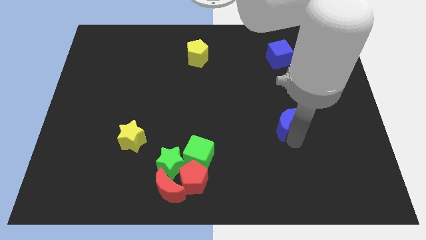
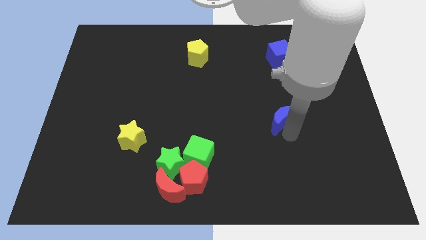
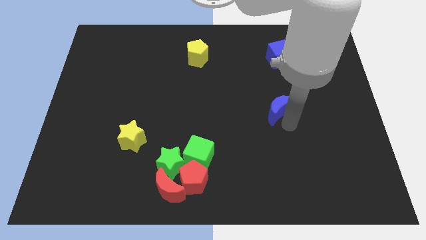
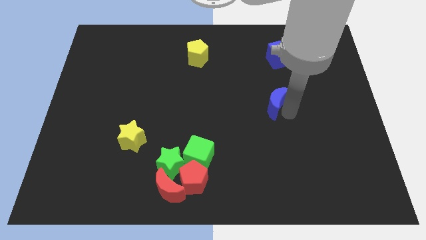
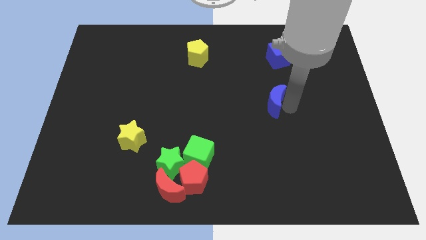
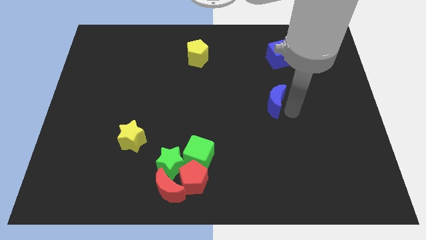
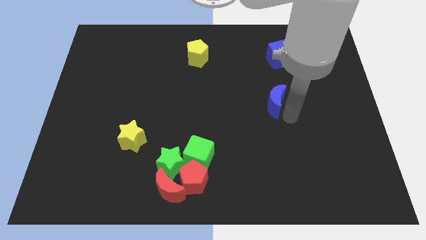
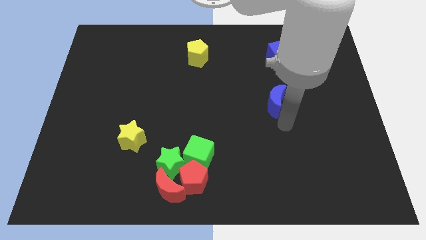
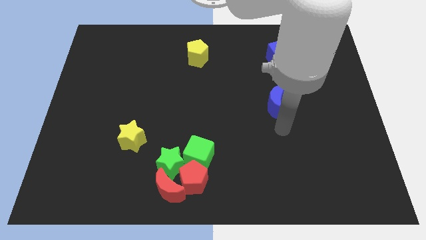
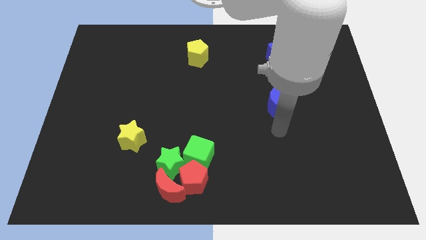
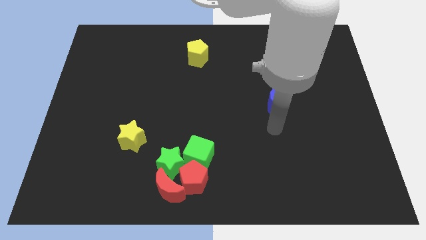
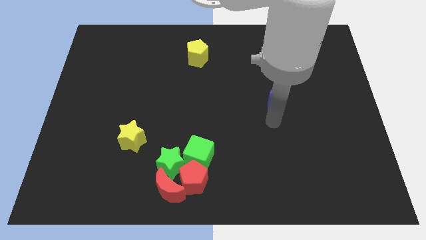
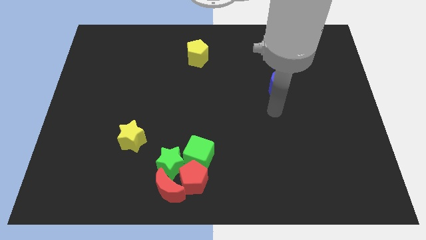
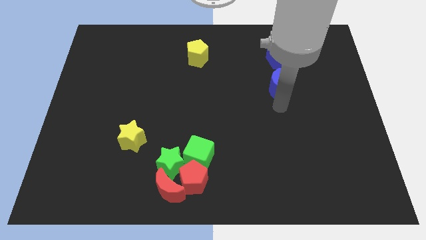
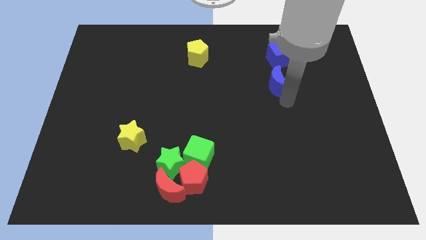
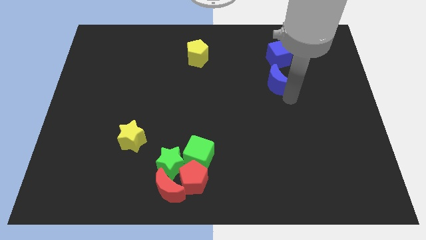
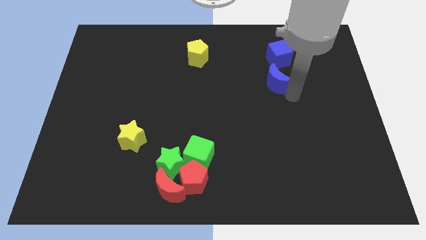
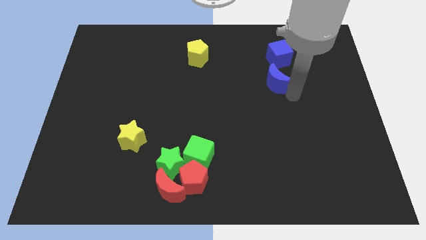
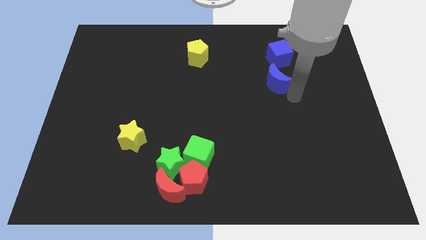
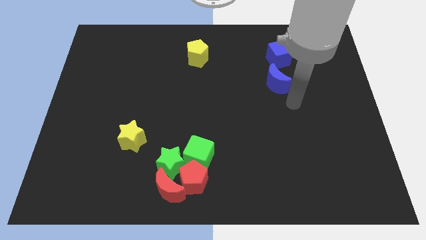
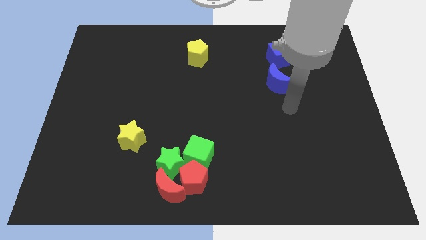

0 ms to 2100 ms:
move the blue crescent into the blue cube

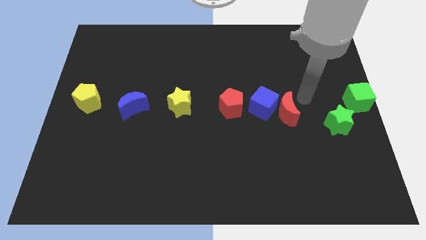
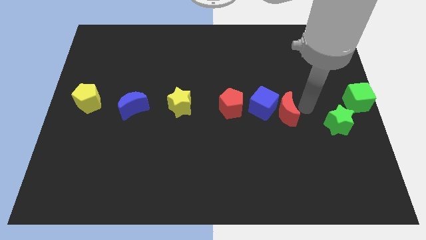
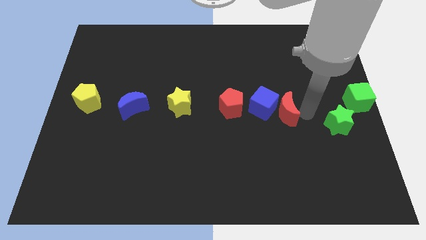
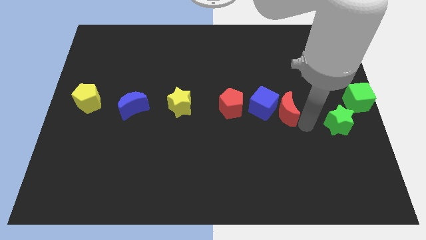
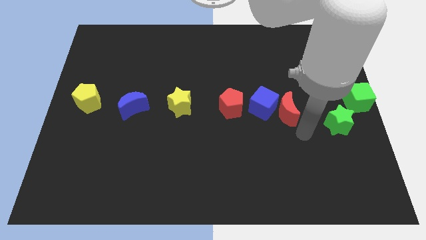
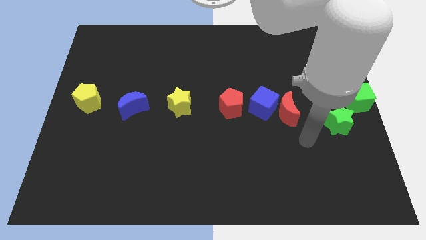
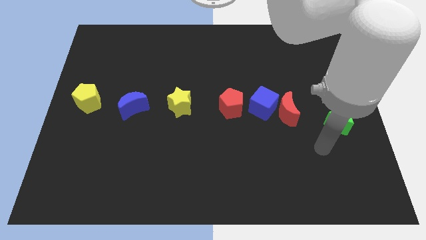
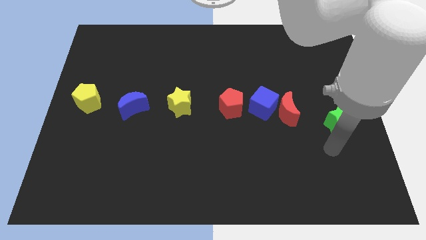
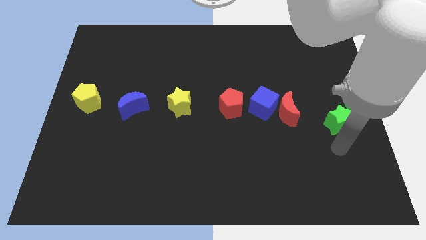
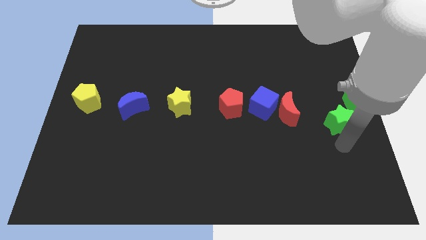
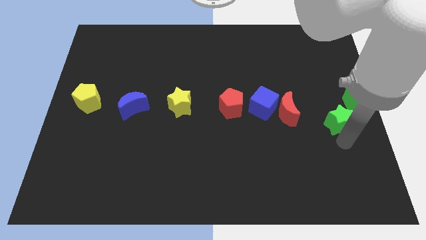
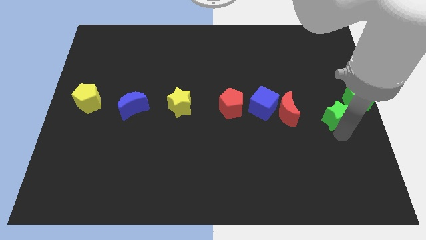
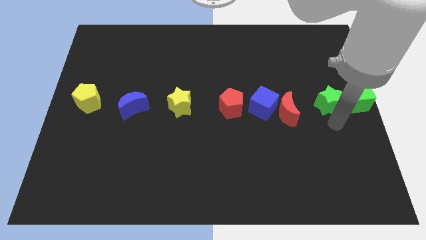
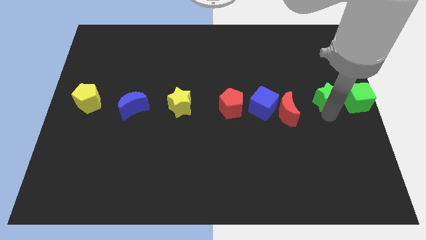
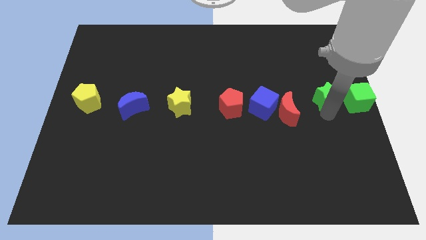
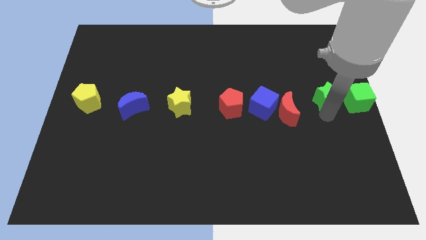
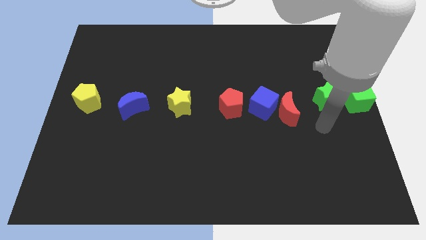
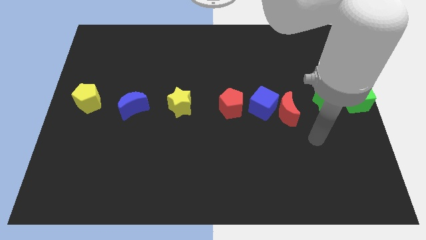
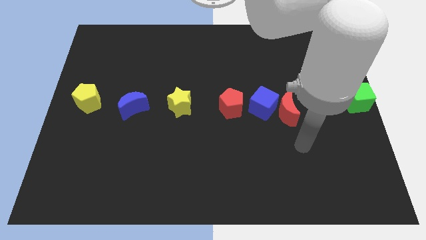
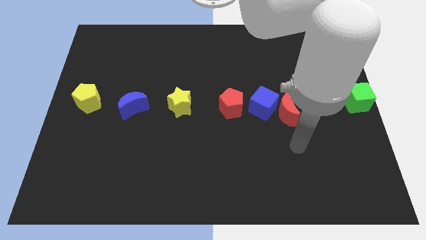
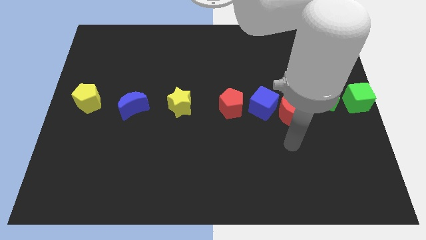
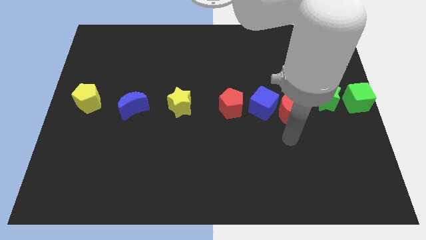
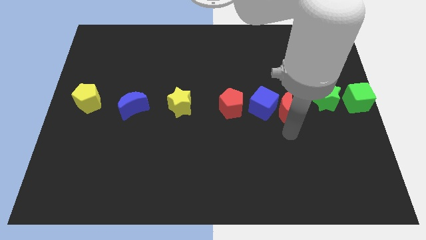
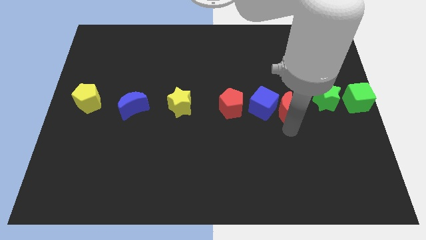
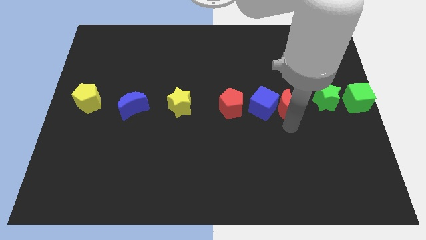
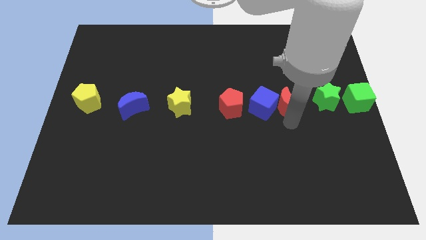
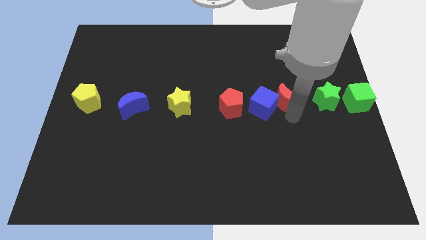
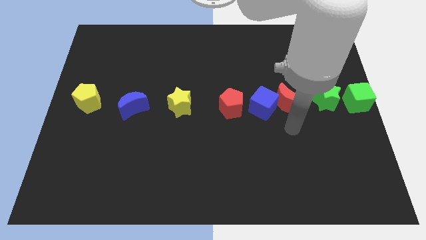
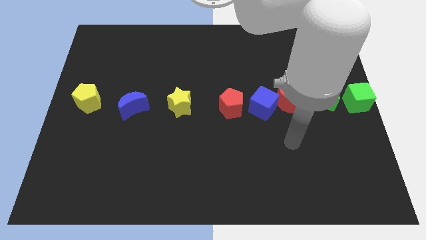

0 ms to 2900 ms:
adjust the red crescent and the green blocks to form a horizontal line with a group of blocks

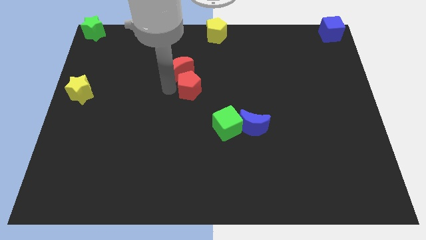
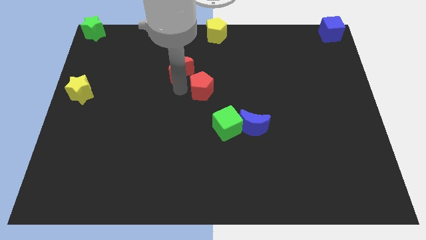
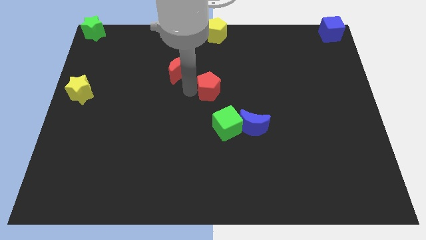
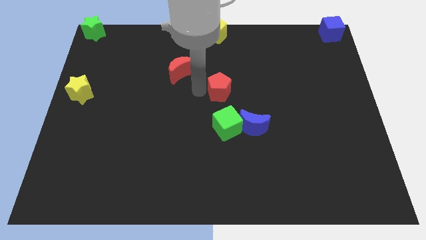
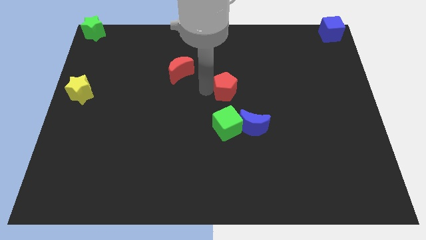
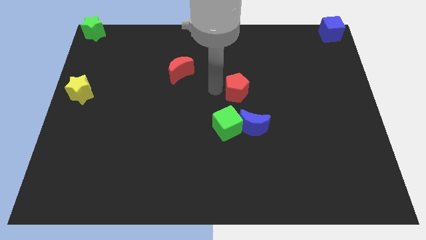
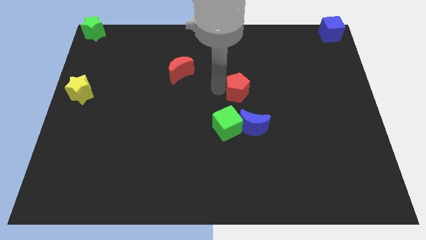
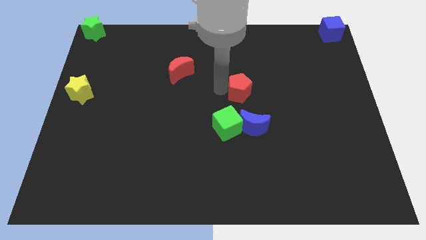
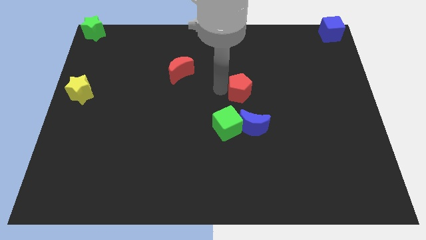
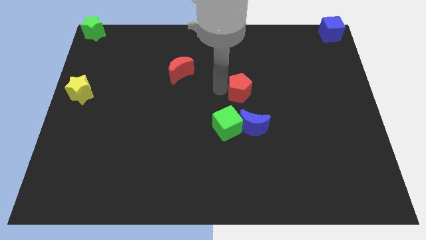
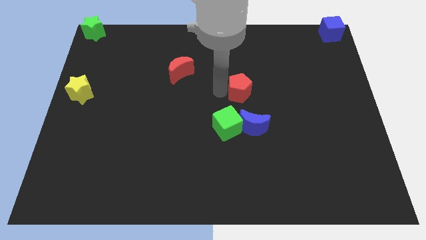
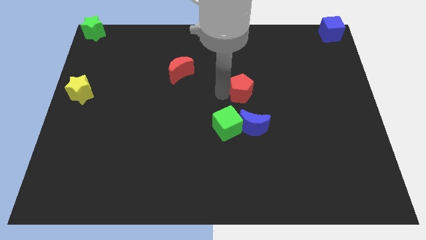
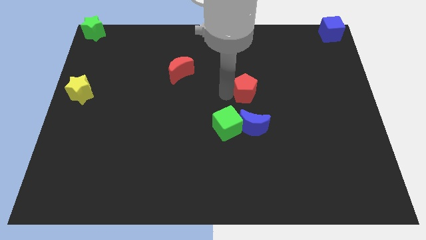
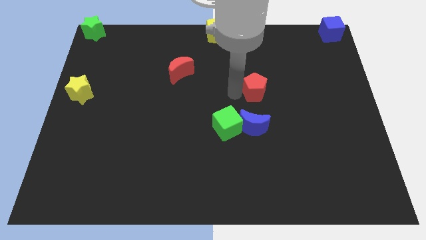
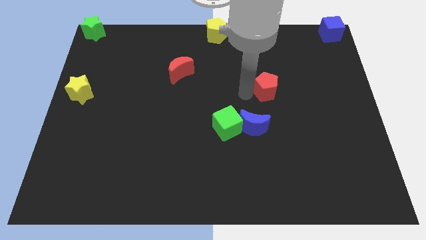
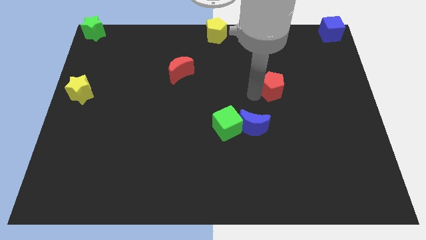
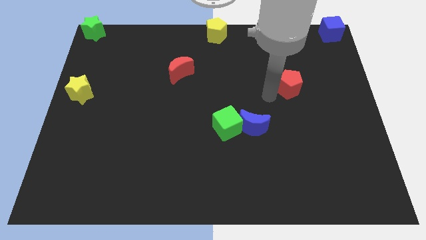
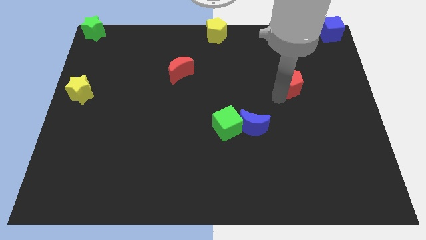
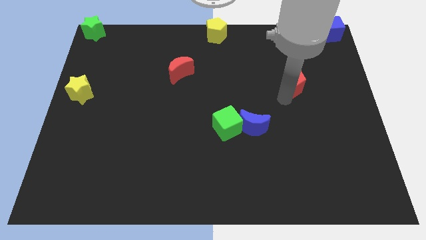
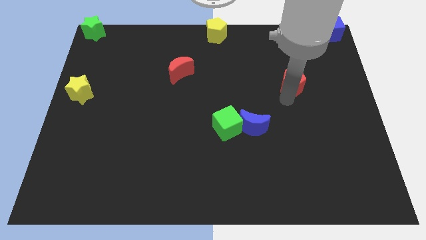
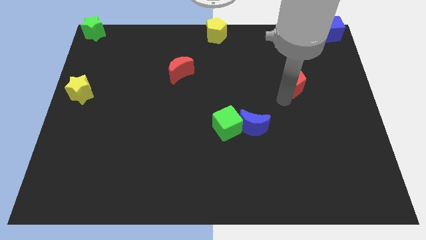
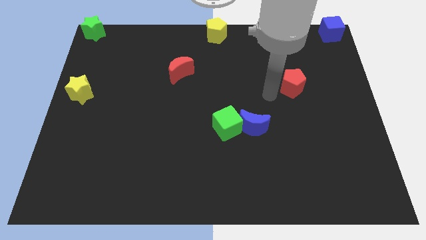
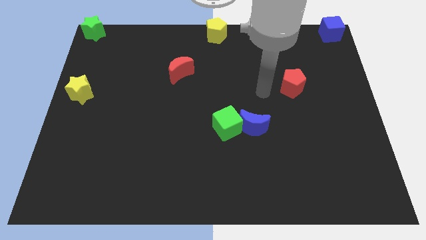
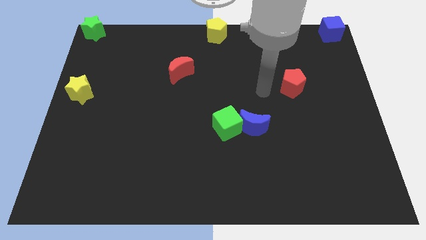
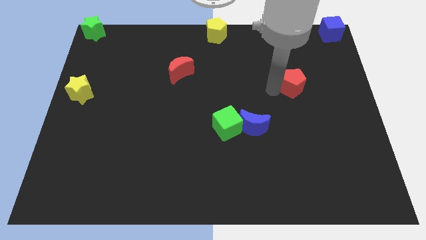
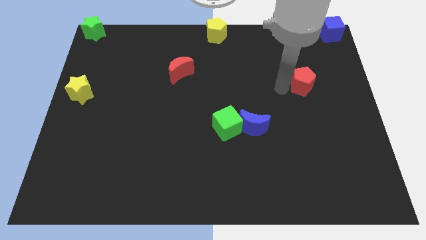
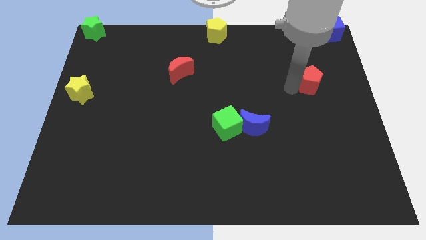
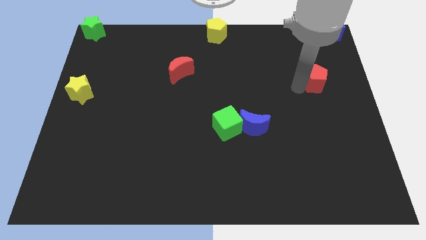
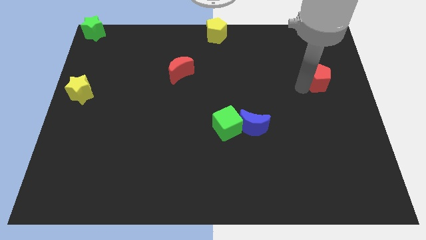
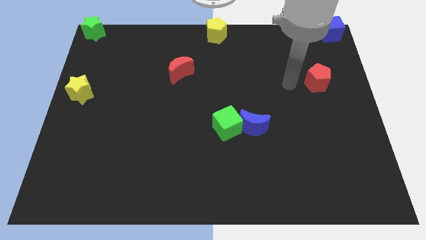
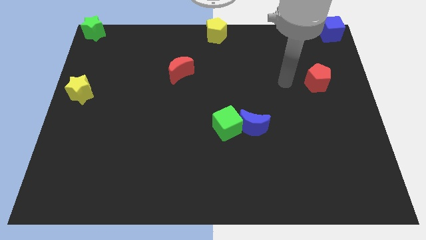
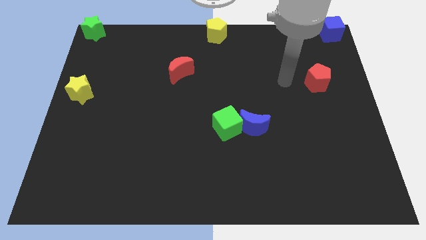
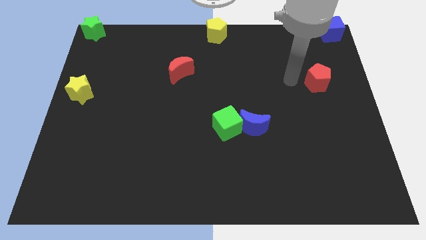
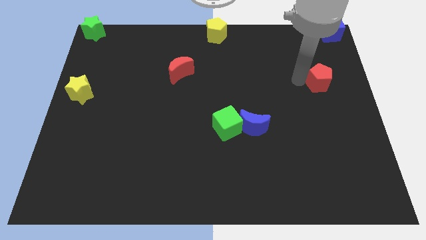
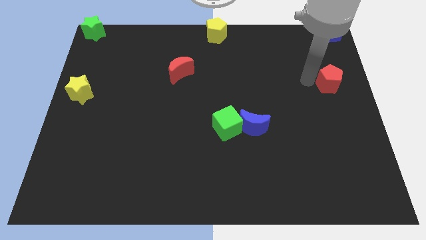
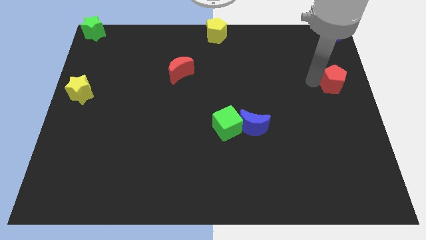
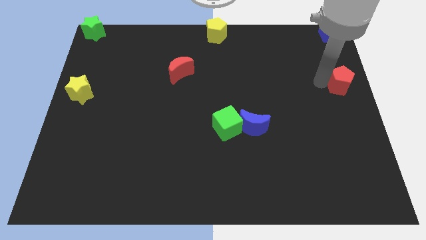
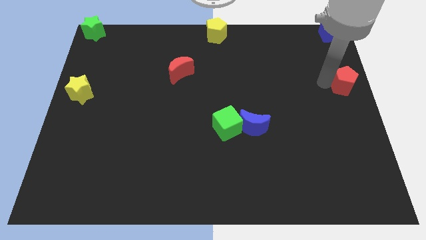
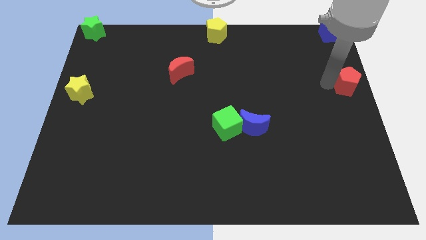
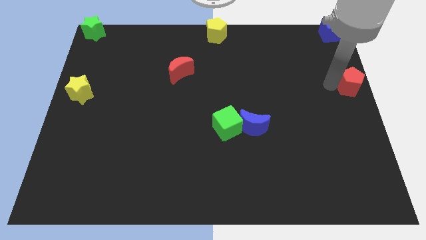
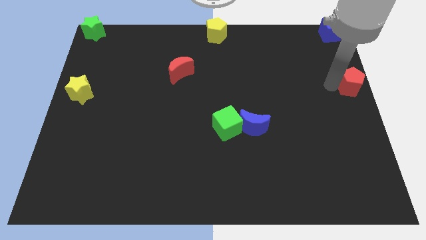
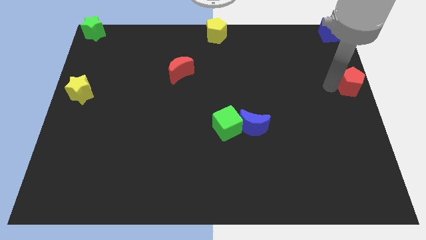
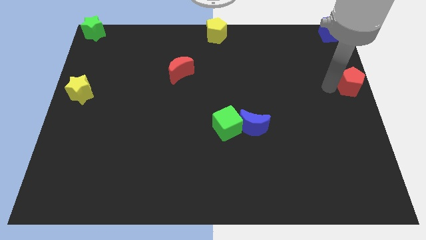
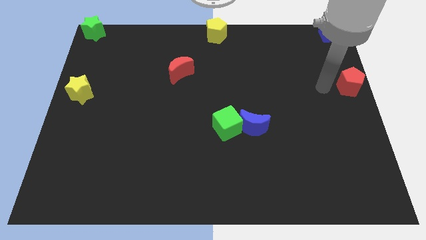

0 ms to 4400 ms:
push the red pentagon to the center right side of the board
